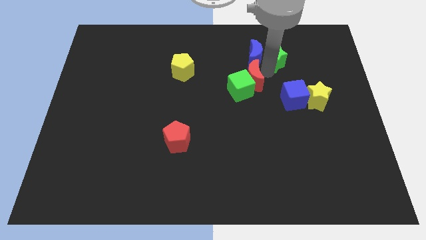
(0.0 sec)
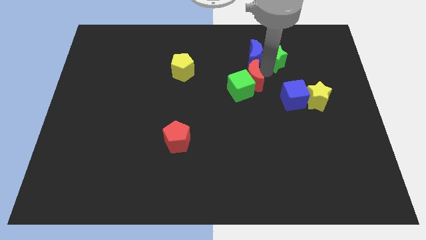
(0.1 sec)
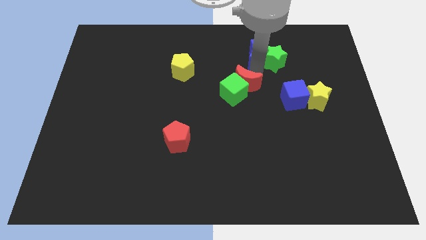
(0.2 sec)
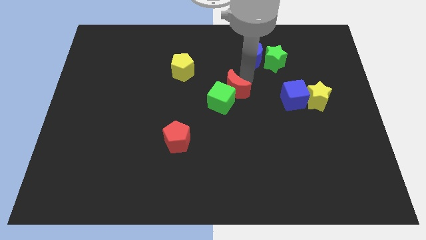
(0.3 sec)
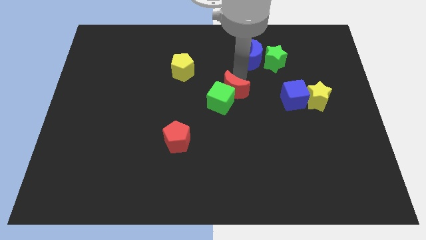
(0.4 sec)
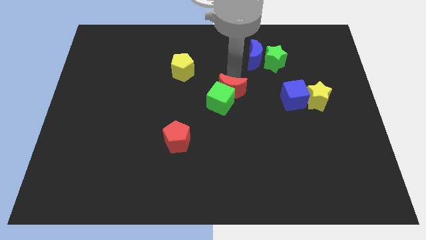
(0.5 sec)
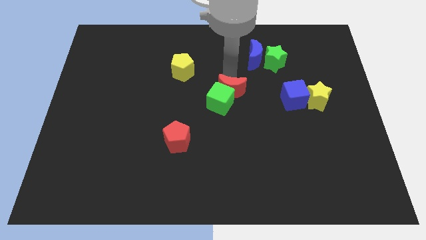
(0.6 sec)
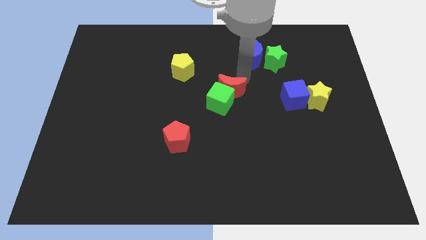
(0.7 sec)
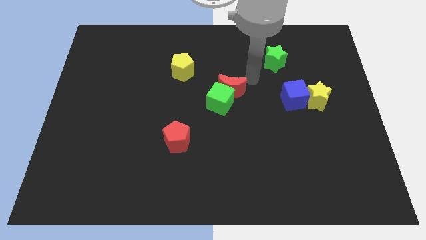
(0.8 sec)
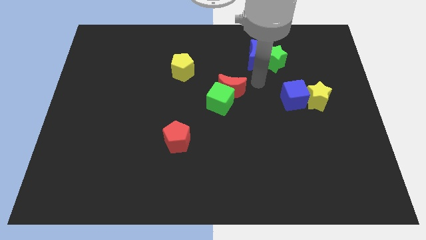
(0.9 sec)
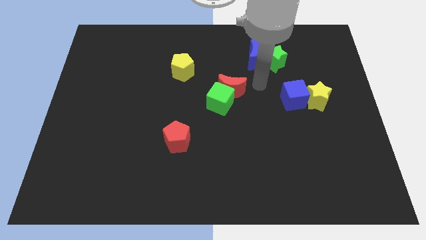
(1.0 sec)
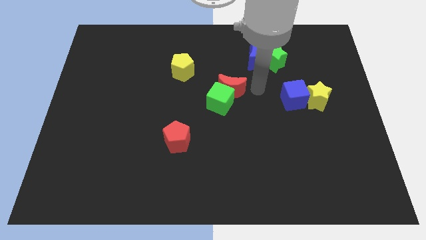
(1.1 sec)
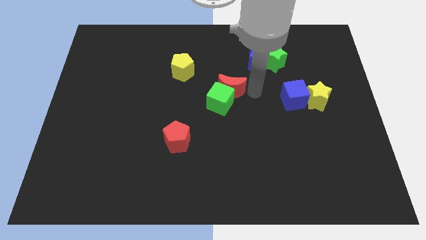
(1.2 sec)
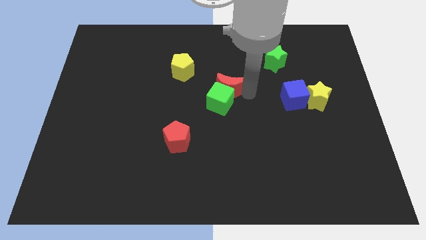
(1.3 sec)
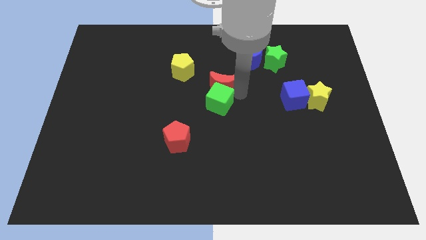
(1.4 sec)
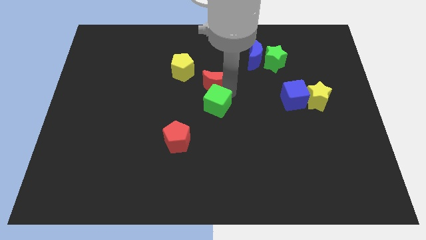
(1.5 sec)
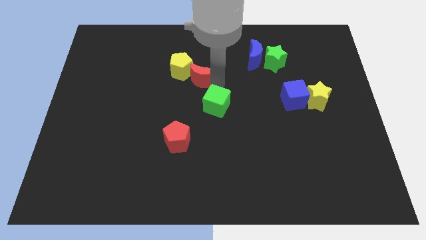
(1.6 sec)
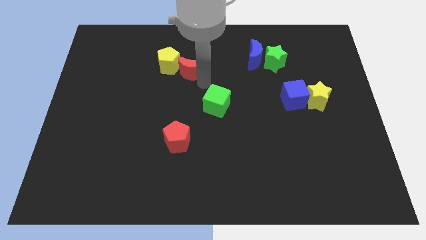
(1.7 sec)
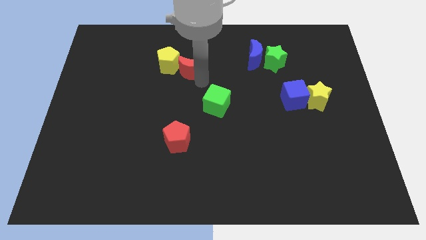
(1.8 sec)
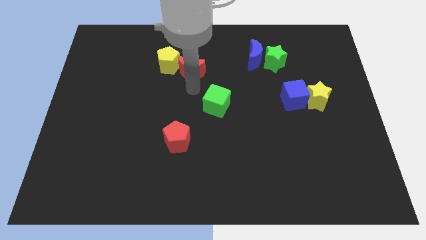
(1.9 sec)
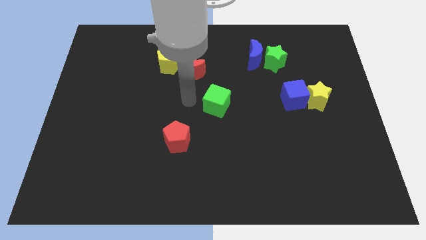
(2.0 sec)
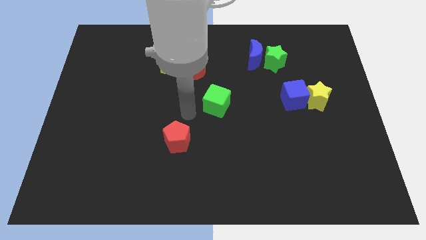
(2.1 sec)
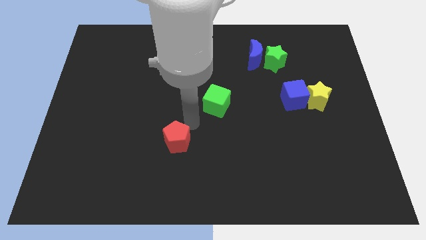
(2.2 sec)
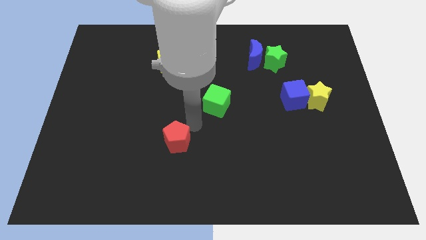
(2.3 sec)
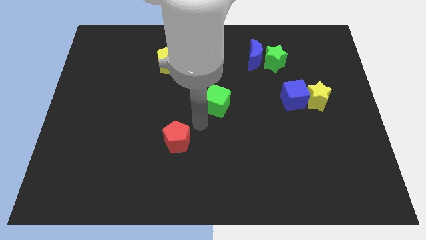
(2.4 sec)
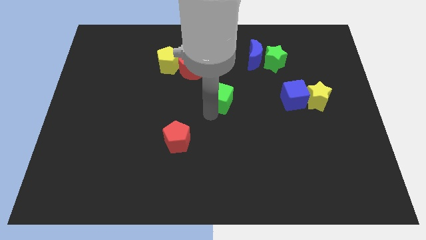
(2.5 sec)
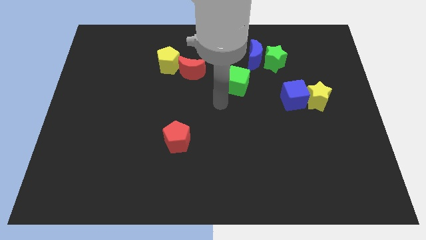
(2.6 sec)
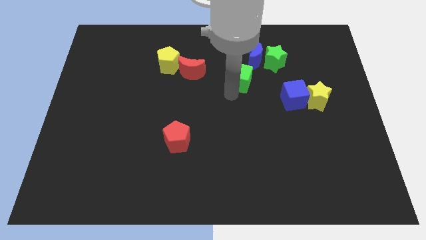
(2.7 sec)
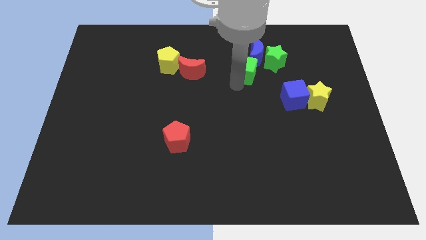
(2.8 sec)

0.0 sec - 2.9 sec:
push the green cube towards blue crescent

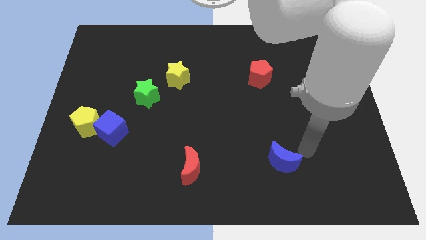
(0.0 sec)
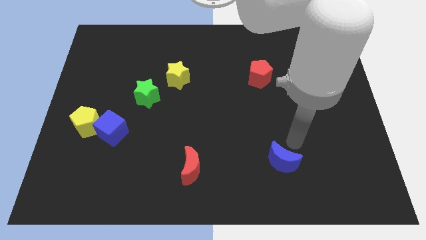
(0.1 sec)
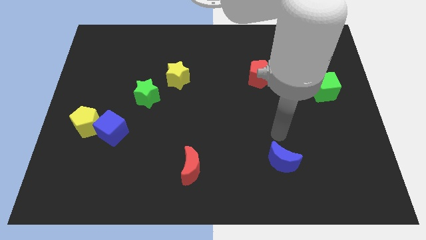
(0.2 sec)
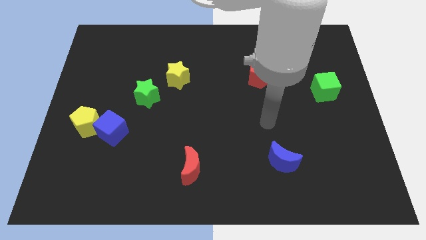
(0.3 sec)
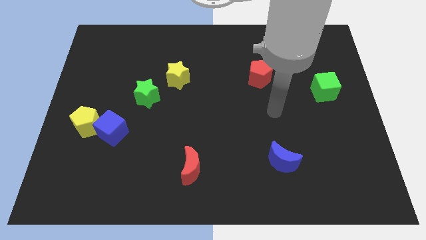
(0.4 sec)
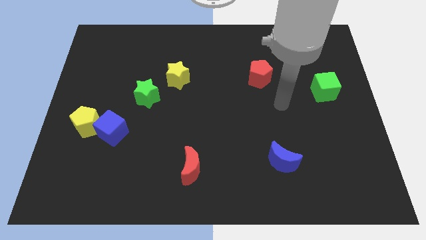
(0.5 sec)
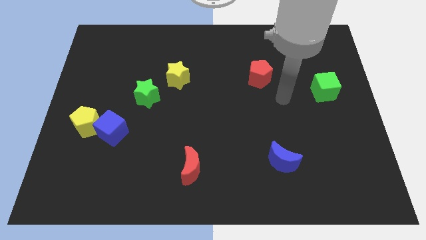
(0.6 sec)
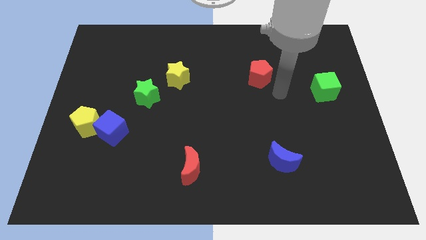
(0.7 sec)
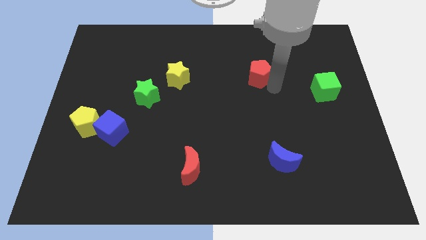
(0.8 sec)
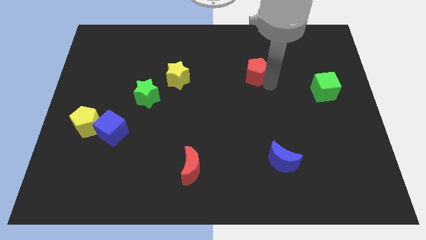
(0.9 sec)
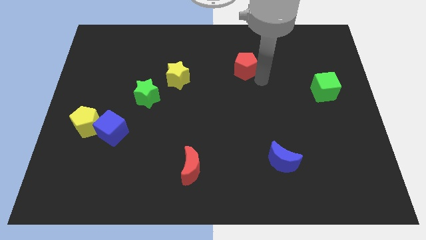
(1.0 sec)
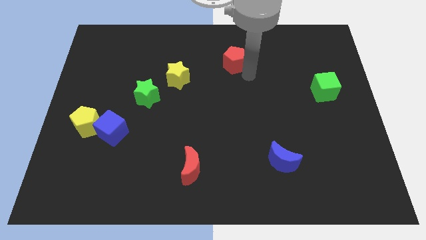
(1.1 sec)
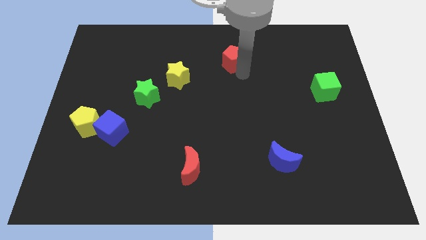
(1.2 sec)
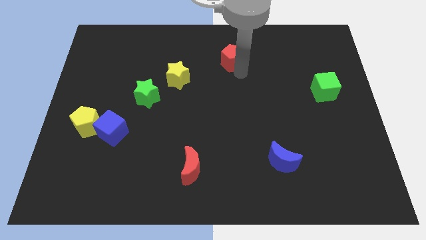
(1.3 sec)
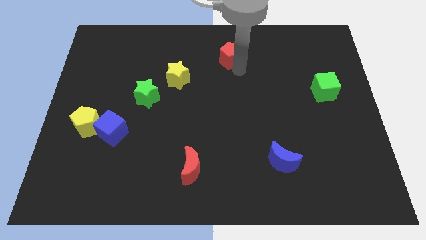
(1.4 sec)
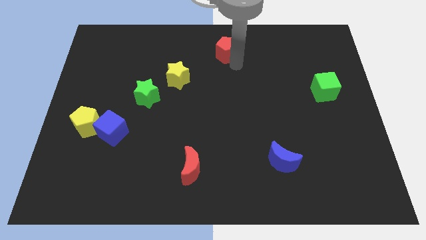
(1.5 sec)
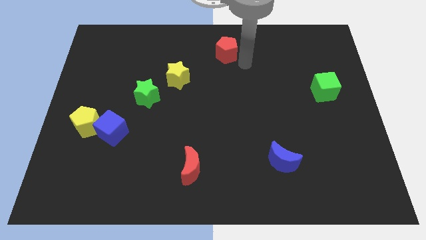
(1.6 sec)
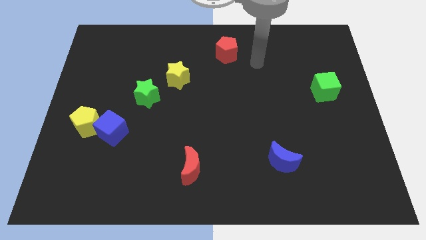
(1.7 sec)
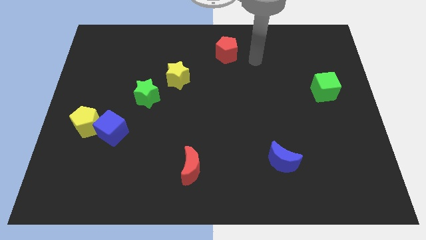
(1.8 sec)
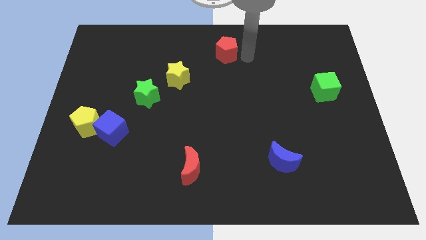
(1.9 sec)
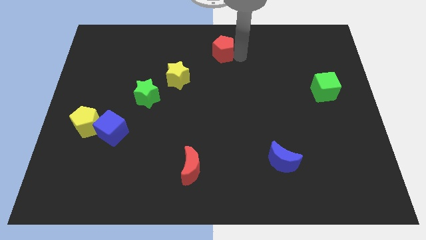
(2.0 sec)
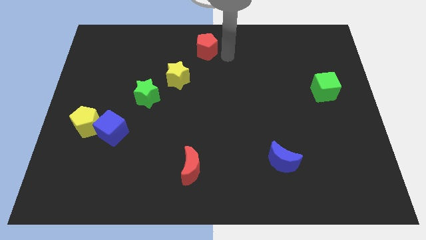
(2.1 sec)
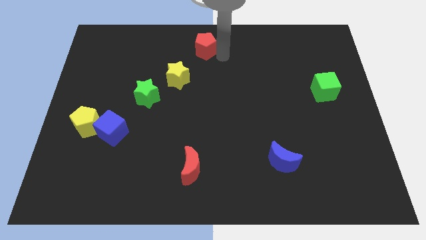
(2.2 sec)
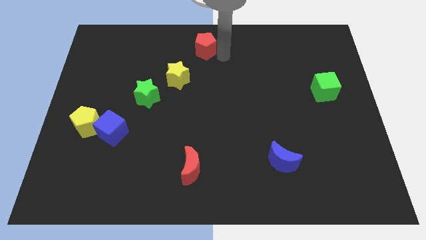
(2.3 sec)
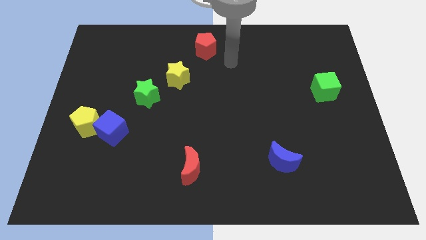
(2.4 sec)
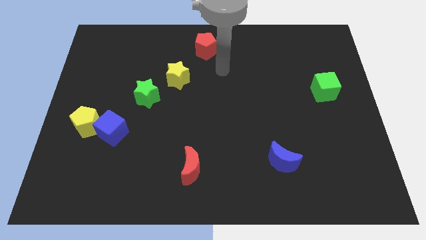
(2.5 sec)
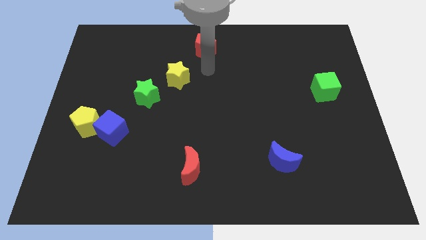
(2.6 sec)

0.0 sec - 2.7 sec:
place the red pentagon to the top side center

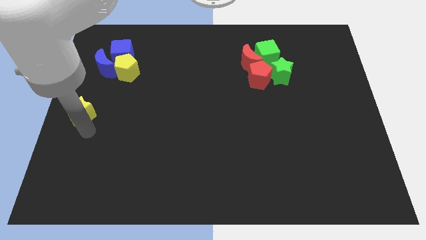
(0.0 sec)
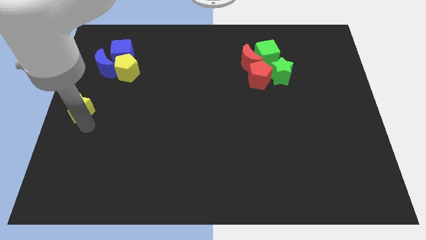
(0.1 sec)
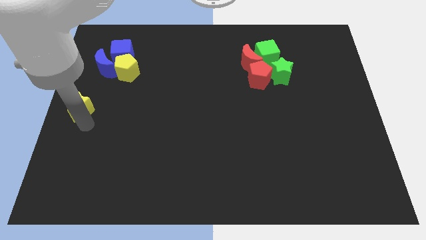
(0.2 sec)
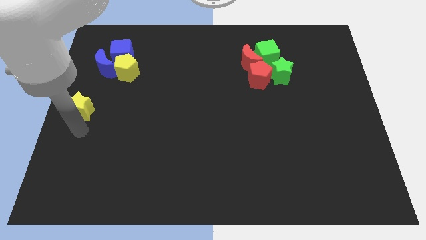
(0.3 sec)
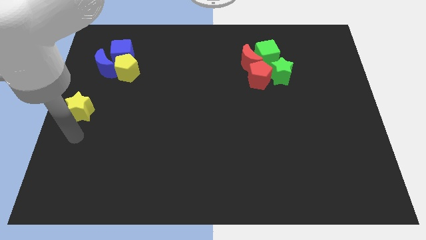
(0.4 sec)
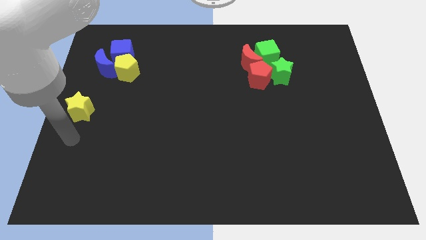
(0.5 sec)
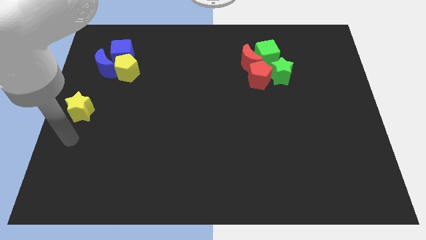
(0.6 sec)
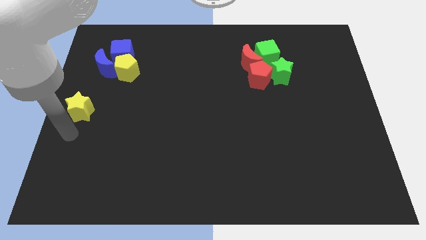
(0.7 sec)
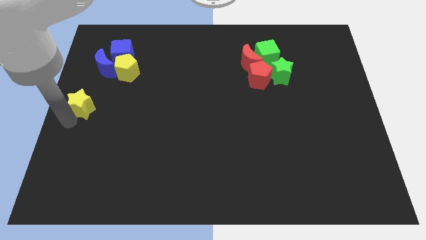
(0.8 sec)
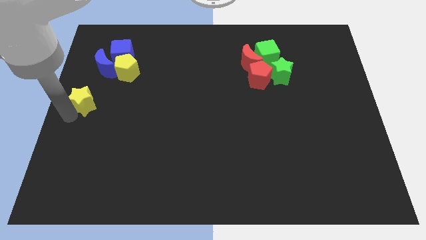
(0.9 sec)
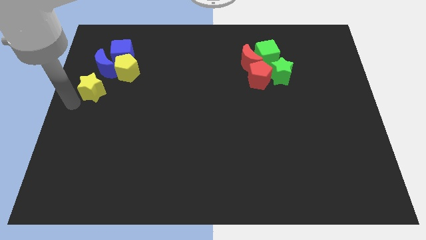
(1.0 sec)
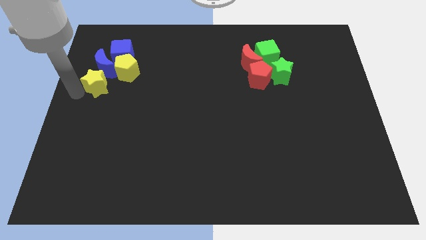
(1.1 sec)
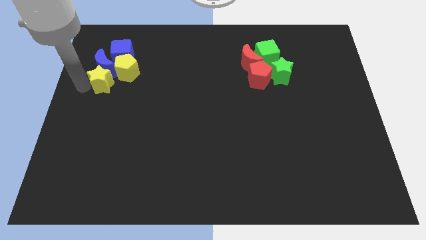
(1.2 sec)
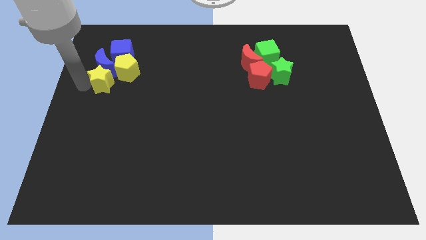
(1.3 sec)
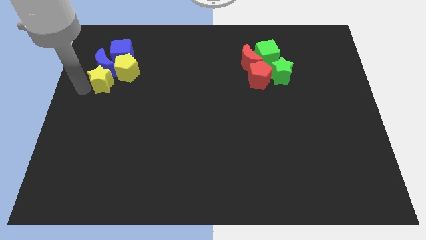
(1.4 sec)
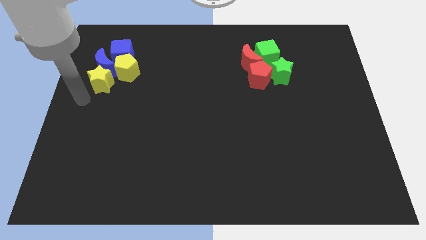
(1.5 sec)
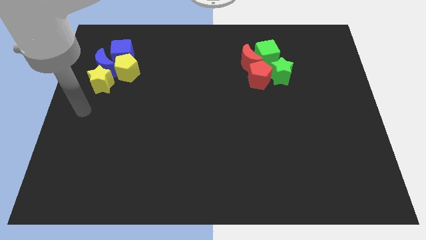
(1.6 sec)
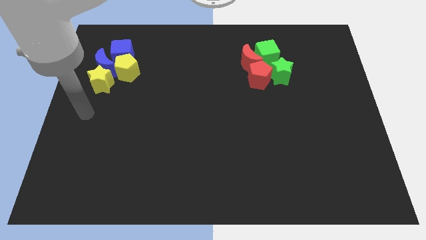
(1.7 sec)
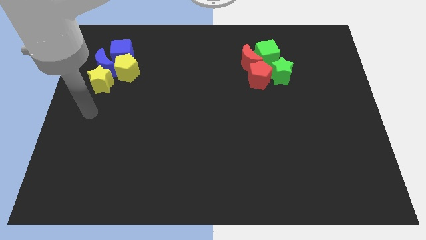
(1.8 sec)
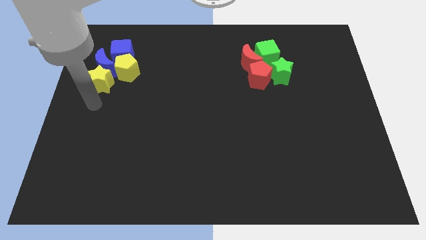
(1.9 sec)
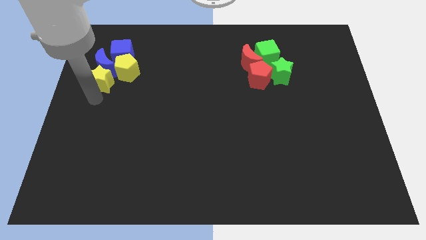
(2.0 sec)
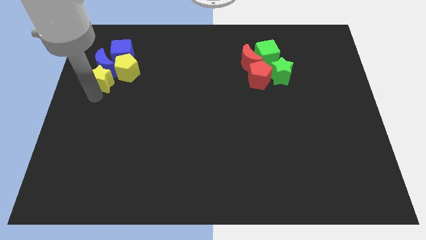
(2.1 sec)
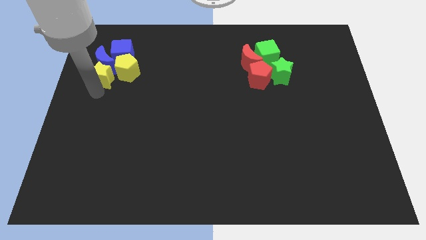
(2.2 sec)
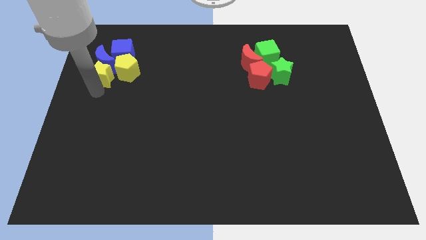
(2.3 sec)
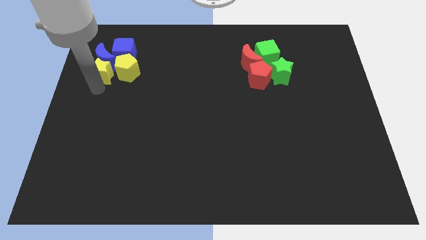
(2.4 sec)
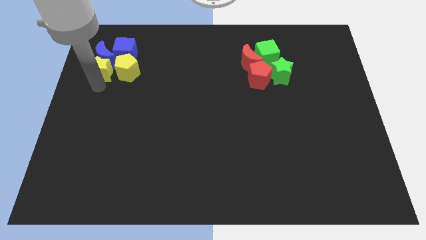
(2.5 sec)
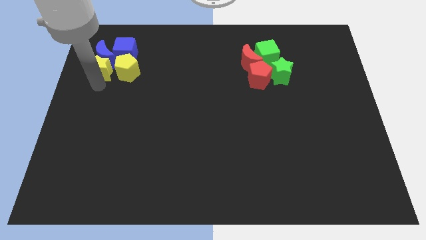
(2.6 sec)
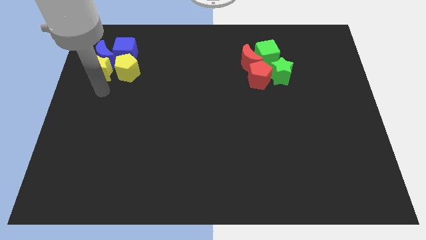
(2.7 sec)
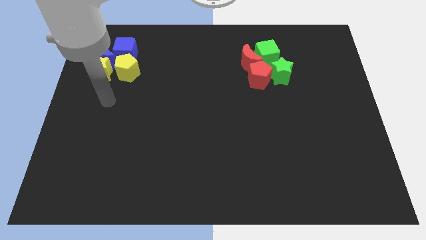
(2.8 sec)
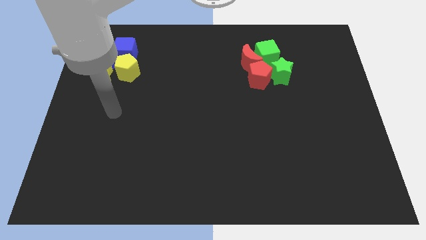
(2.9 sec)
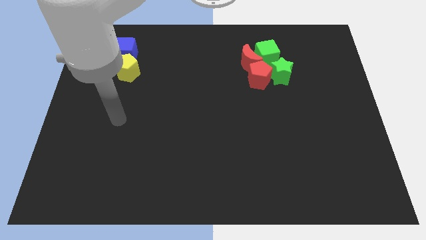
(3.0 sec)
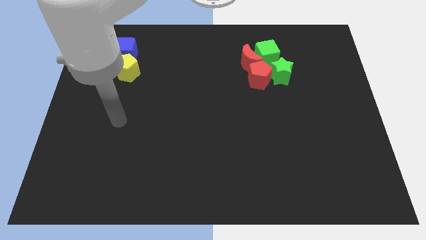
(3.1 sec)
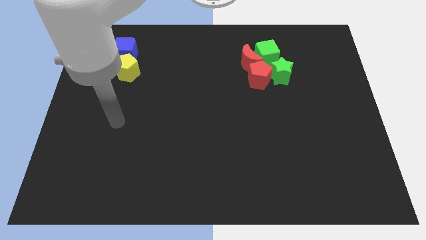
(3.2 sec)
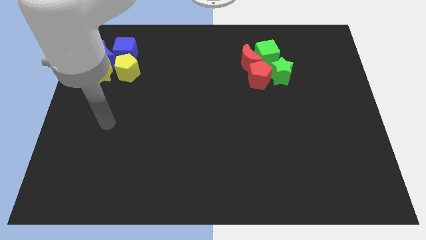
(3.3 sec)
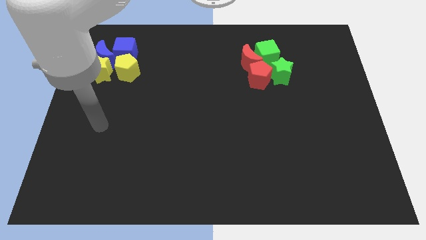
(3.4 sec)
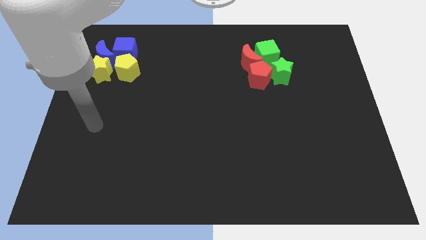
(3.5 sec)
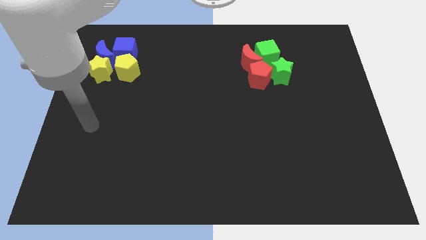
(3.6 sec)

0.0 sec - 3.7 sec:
move yellow star close to the objects
